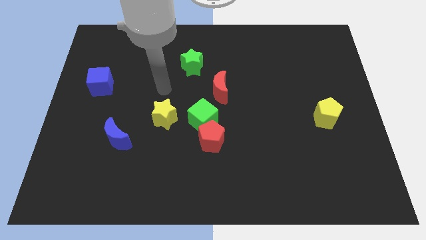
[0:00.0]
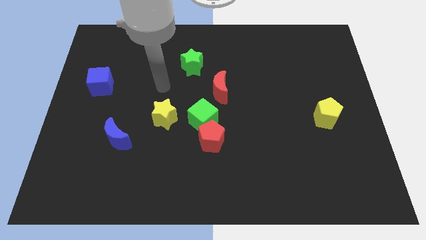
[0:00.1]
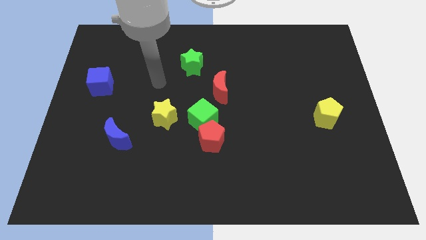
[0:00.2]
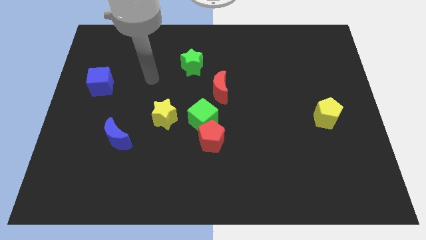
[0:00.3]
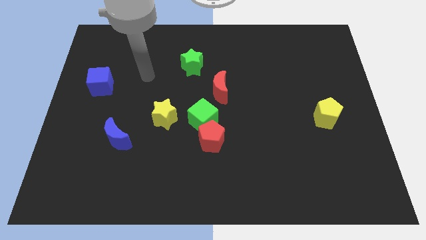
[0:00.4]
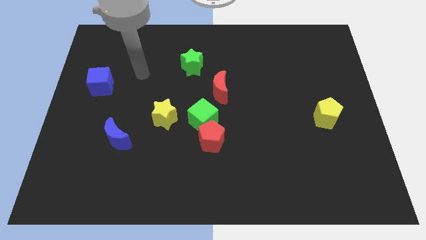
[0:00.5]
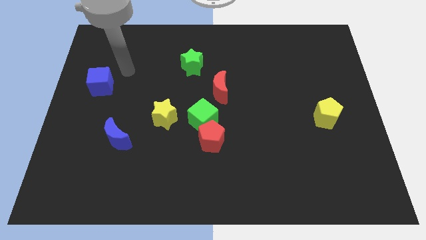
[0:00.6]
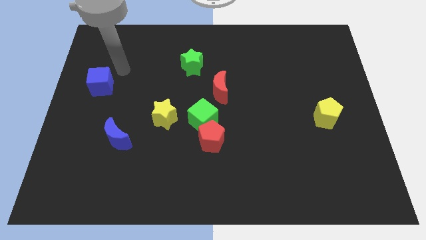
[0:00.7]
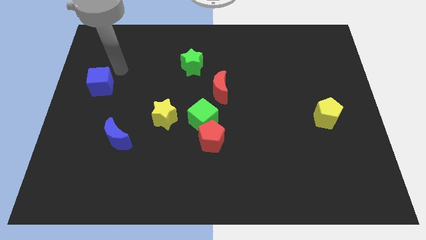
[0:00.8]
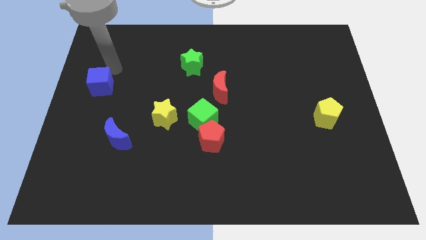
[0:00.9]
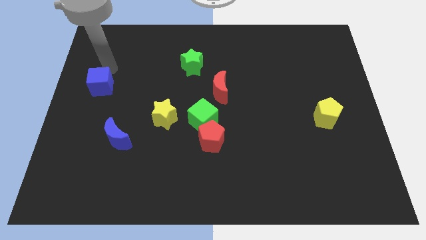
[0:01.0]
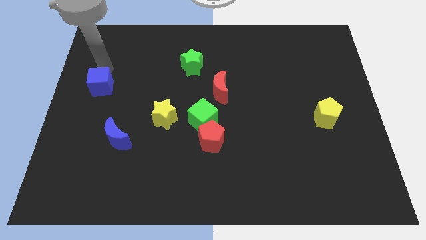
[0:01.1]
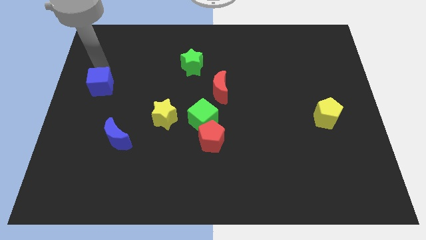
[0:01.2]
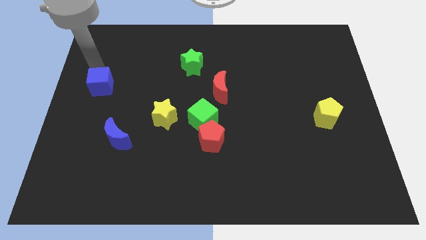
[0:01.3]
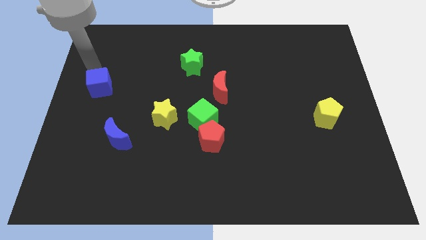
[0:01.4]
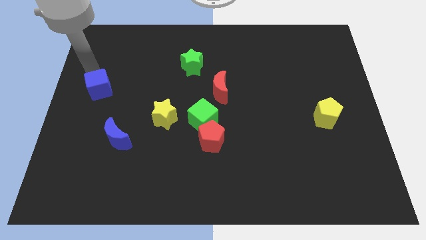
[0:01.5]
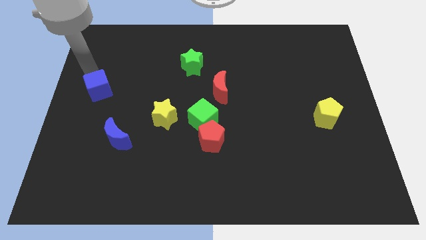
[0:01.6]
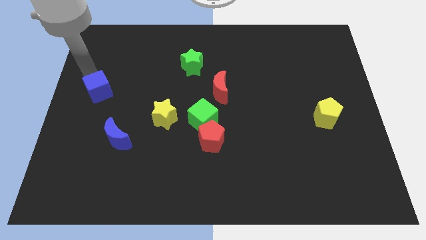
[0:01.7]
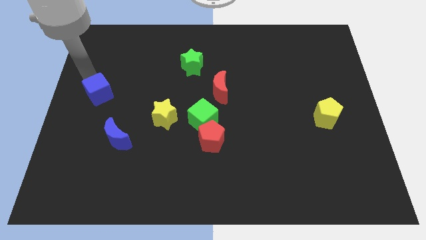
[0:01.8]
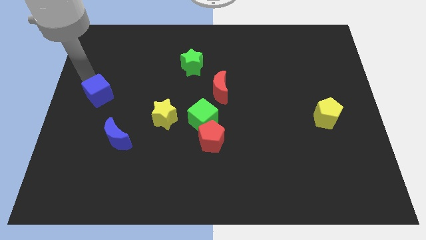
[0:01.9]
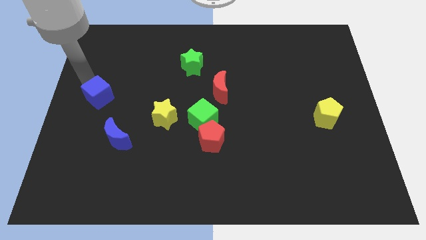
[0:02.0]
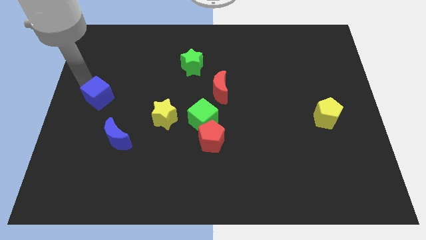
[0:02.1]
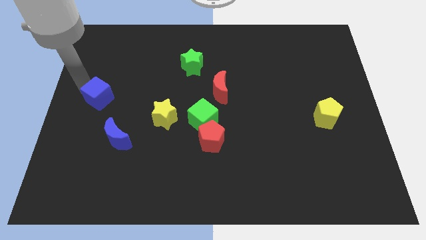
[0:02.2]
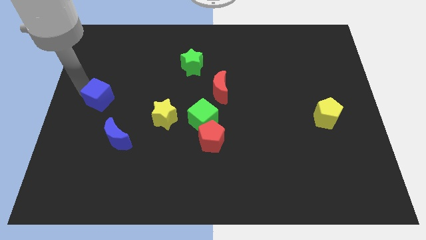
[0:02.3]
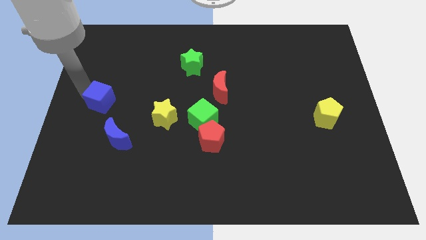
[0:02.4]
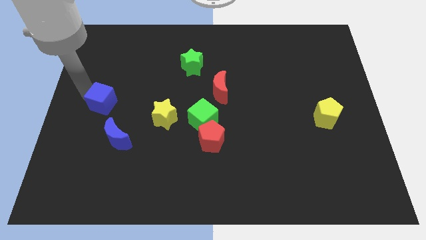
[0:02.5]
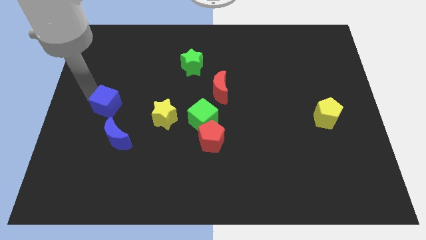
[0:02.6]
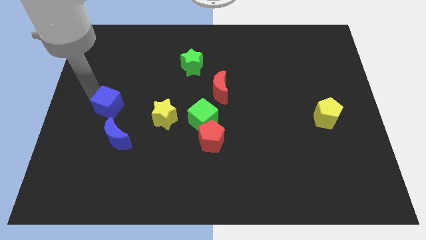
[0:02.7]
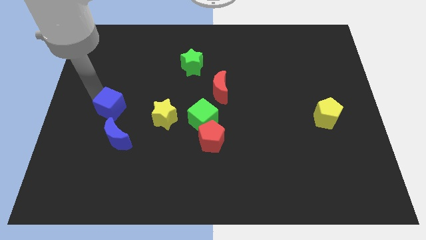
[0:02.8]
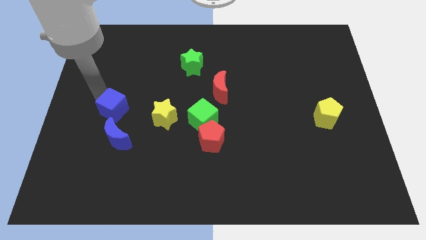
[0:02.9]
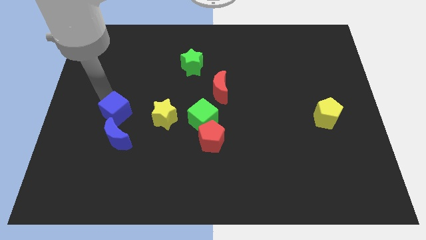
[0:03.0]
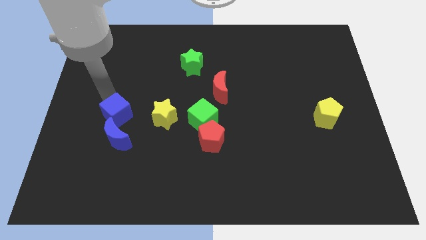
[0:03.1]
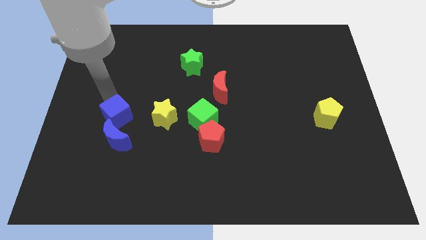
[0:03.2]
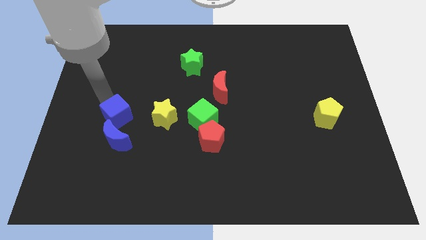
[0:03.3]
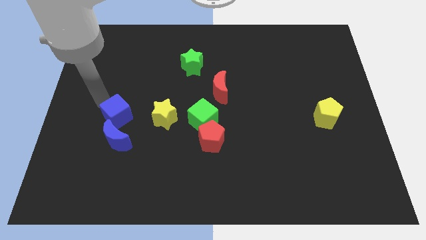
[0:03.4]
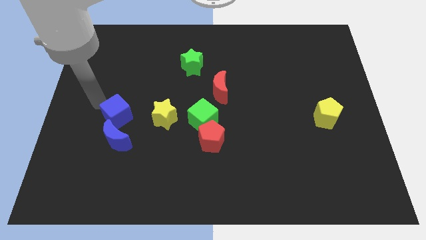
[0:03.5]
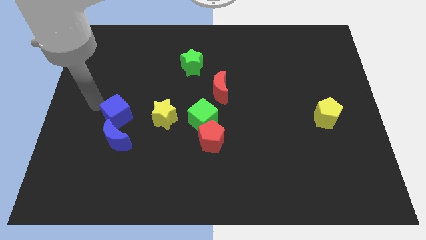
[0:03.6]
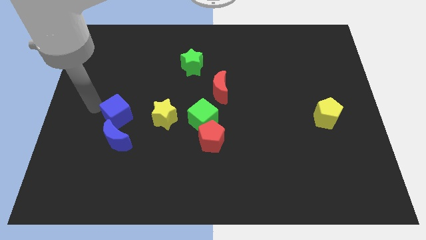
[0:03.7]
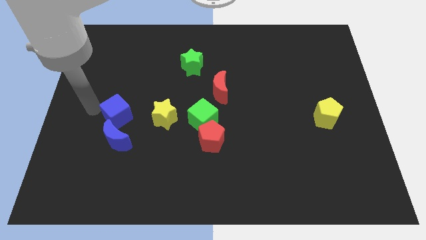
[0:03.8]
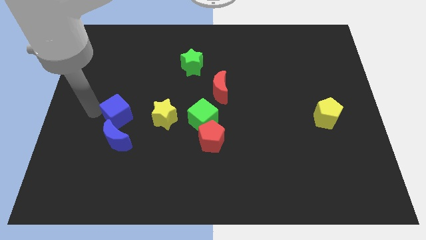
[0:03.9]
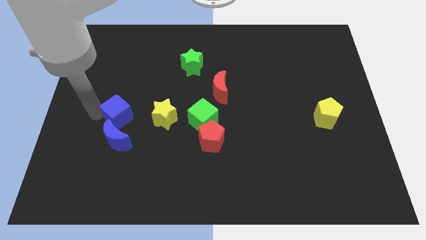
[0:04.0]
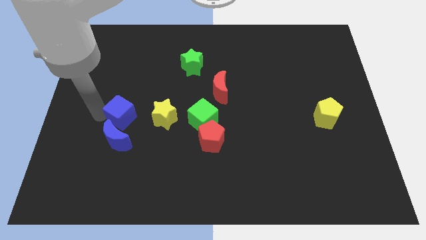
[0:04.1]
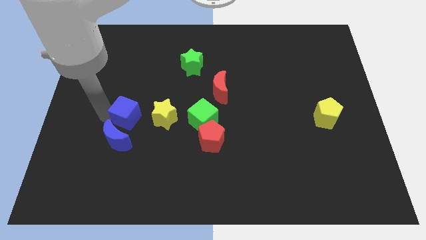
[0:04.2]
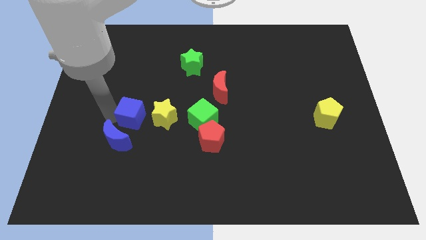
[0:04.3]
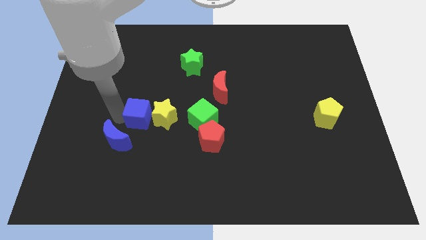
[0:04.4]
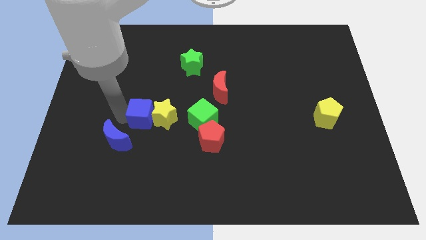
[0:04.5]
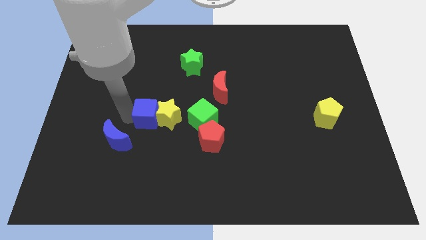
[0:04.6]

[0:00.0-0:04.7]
move the blue cube next to the yellow star

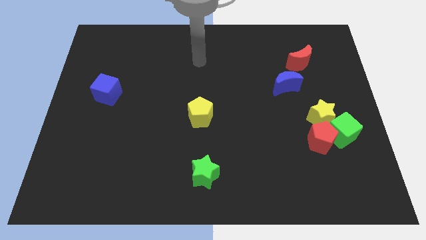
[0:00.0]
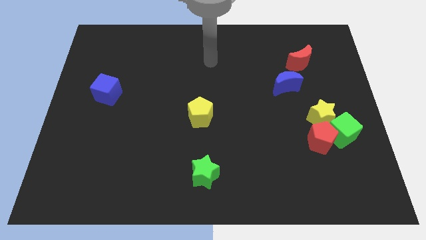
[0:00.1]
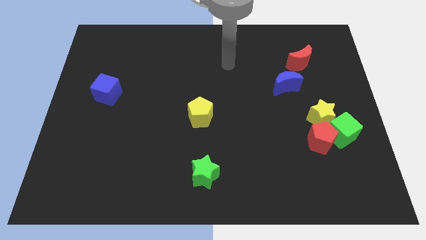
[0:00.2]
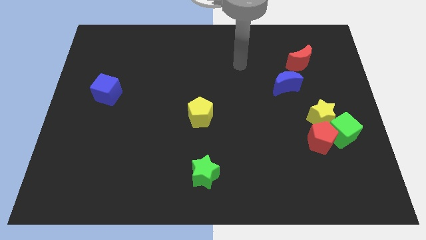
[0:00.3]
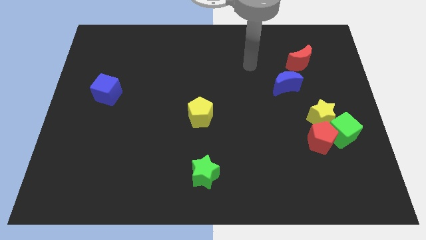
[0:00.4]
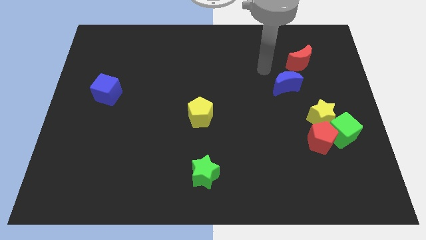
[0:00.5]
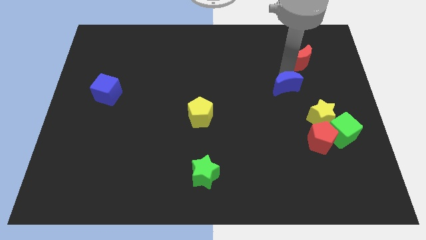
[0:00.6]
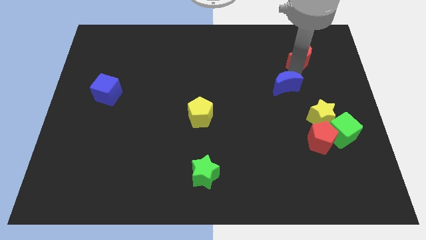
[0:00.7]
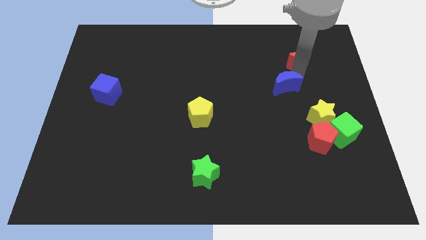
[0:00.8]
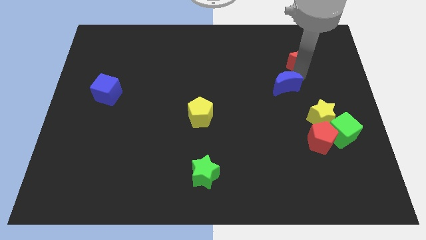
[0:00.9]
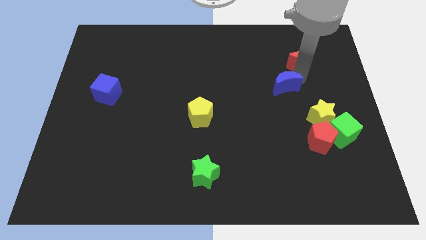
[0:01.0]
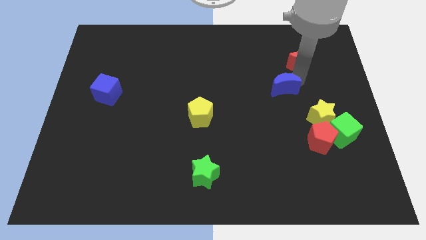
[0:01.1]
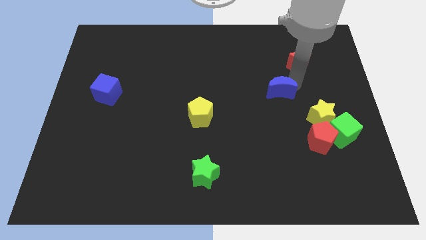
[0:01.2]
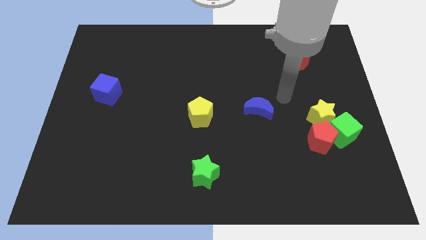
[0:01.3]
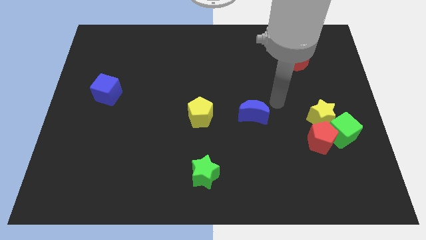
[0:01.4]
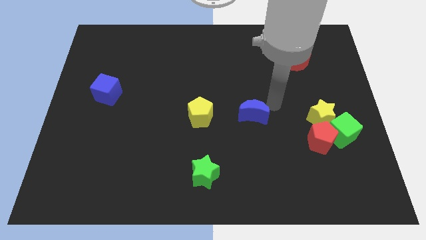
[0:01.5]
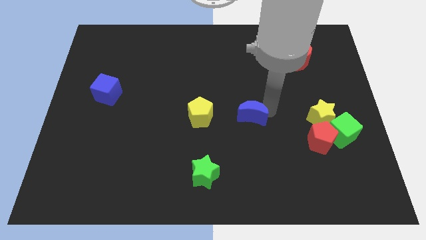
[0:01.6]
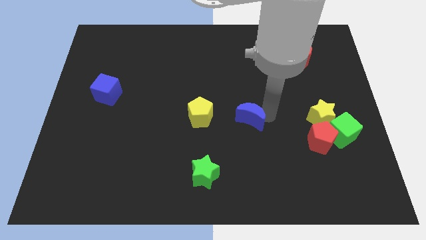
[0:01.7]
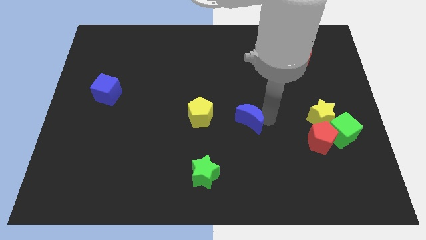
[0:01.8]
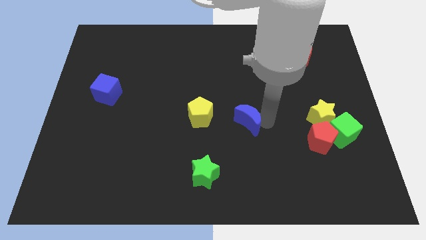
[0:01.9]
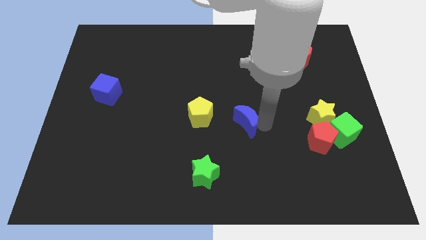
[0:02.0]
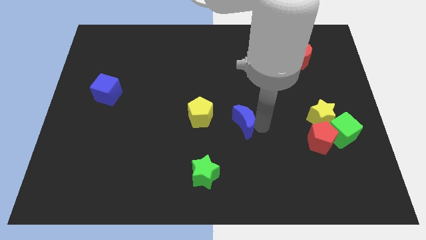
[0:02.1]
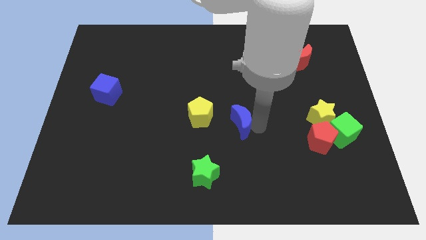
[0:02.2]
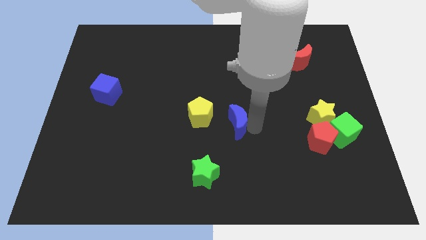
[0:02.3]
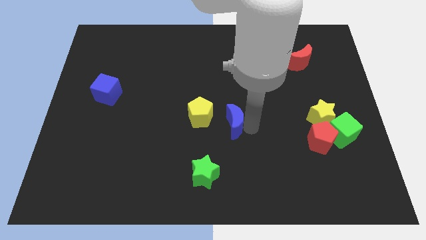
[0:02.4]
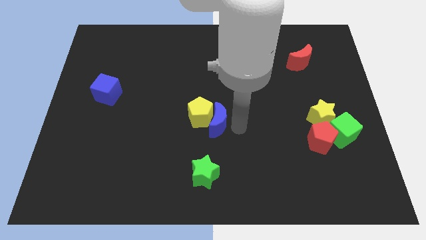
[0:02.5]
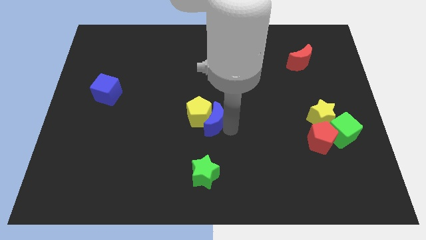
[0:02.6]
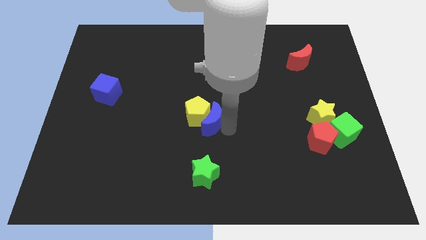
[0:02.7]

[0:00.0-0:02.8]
slide the blue moon next to the yellow pentagon

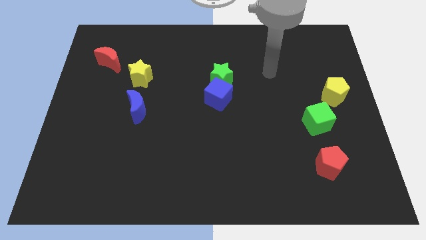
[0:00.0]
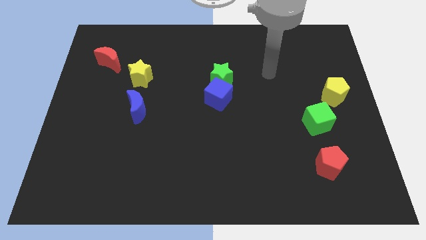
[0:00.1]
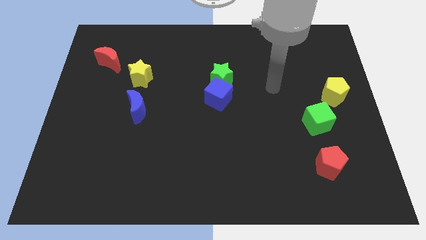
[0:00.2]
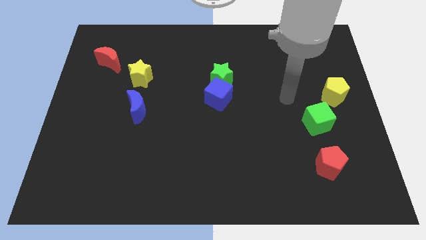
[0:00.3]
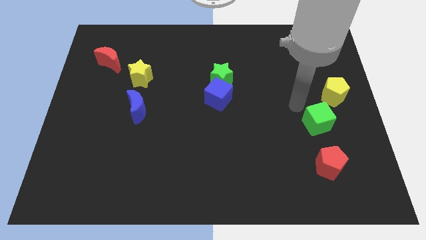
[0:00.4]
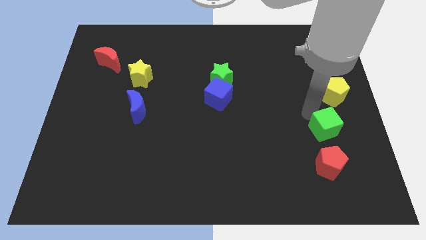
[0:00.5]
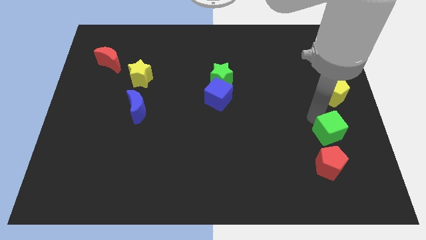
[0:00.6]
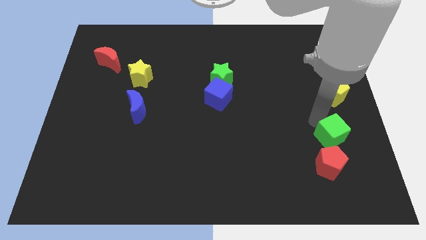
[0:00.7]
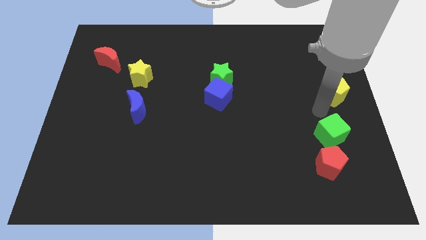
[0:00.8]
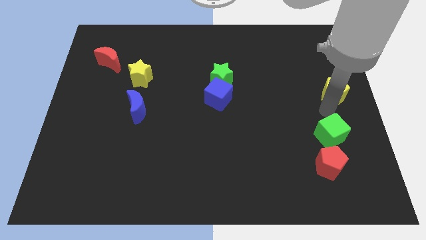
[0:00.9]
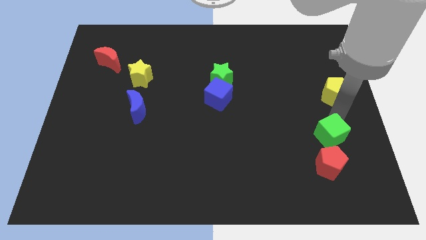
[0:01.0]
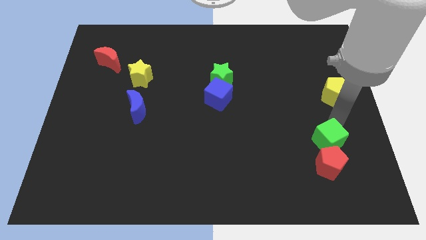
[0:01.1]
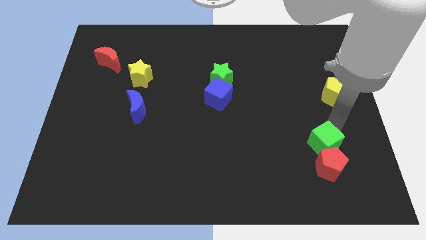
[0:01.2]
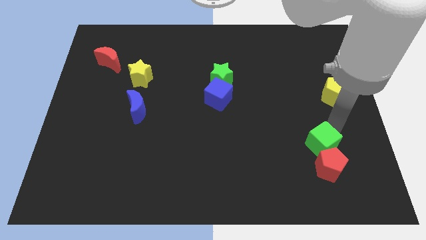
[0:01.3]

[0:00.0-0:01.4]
push the green cube towards the red pentagon
